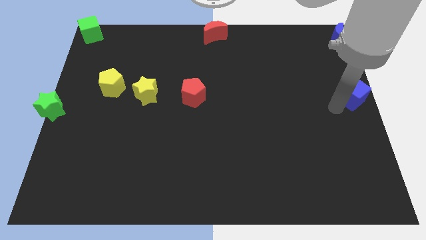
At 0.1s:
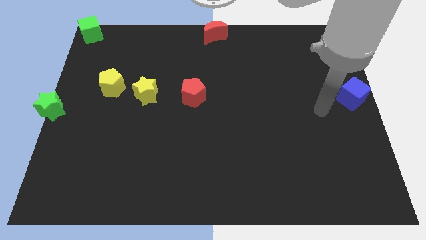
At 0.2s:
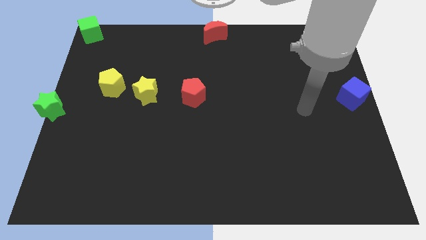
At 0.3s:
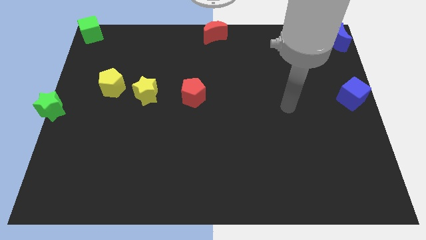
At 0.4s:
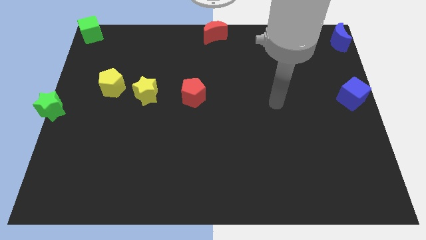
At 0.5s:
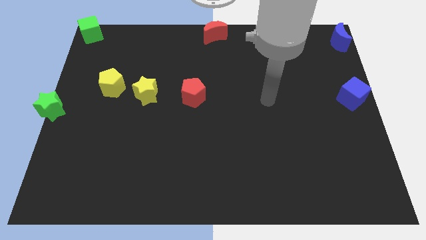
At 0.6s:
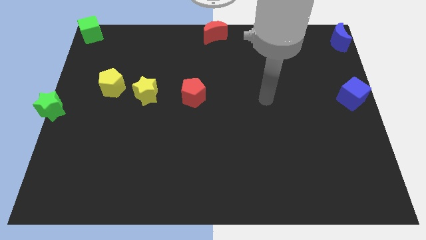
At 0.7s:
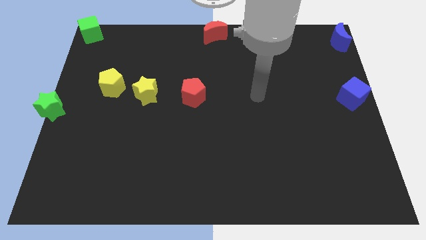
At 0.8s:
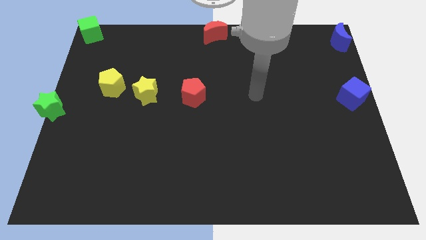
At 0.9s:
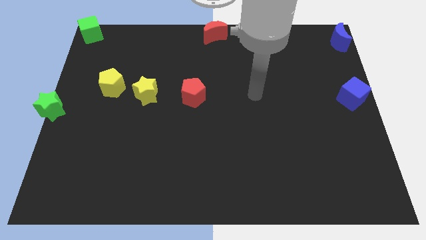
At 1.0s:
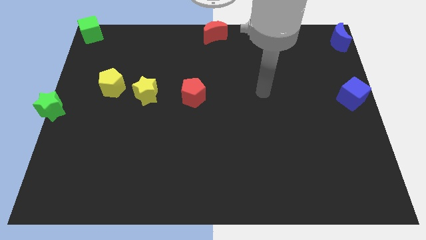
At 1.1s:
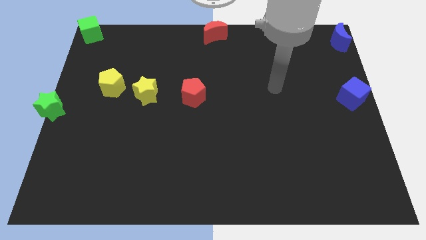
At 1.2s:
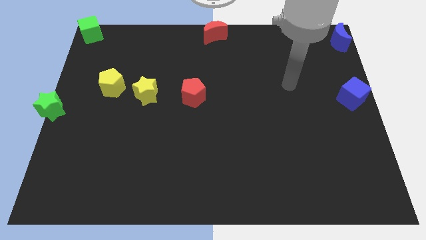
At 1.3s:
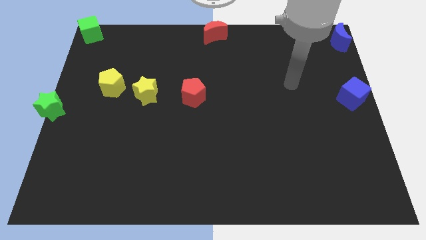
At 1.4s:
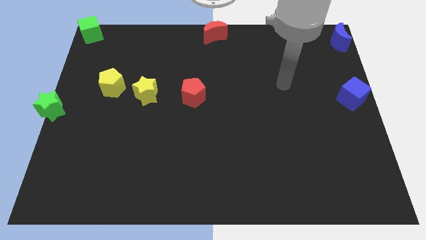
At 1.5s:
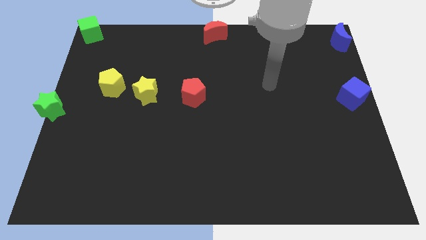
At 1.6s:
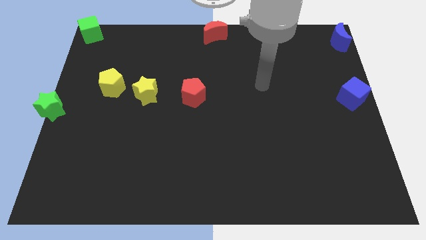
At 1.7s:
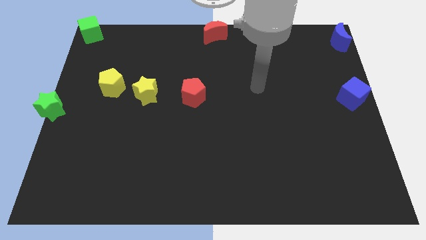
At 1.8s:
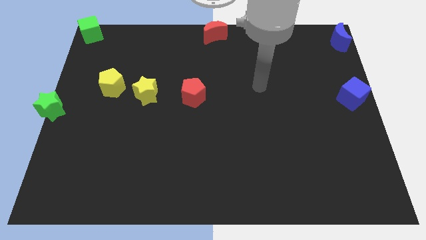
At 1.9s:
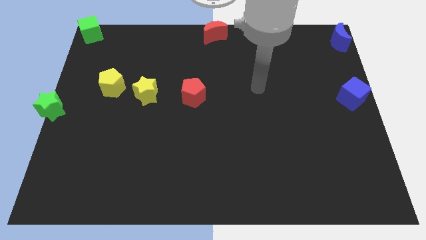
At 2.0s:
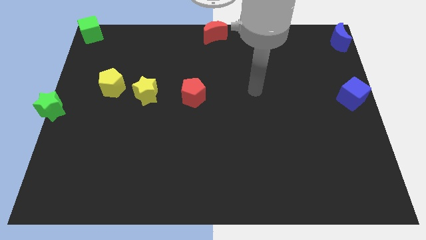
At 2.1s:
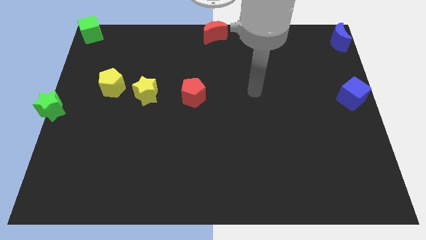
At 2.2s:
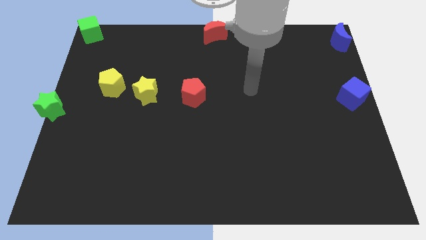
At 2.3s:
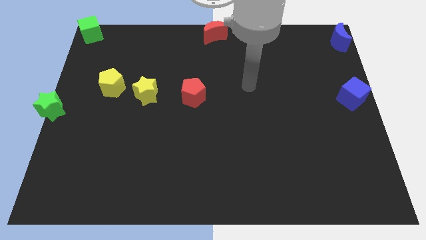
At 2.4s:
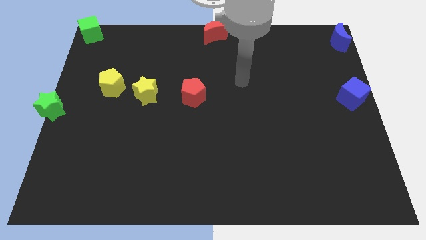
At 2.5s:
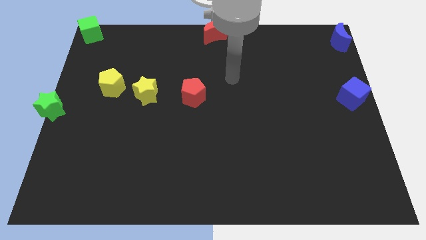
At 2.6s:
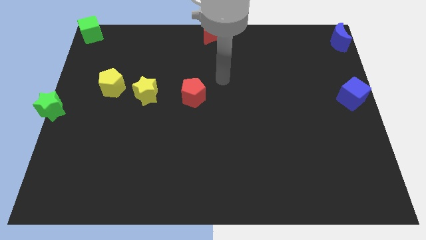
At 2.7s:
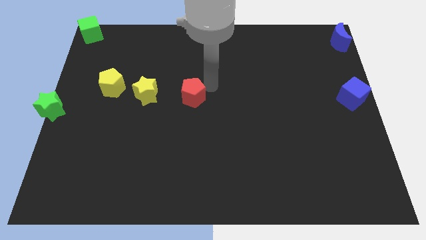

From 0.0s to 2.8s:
move the arm away from the blue cube

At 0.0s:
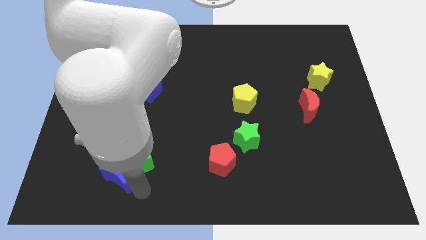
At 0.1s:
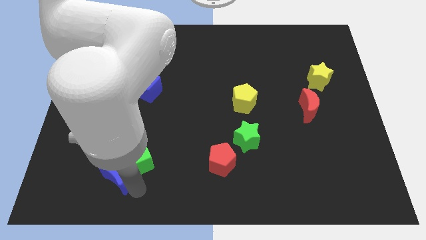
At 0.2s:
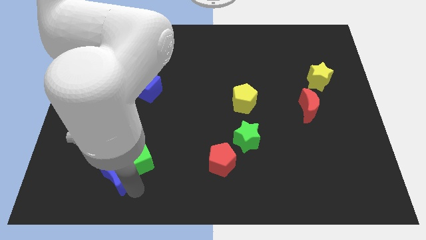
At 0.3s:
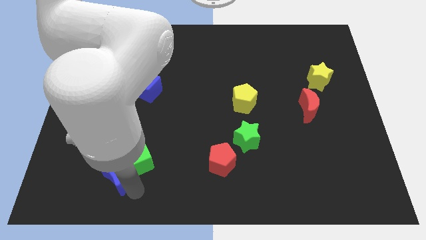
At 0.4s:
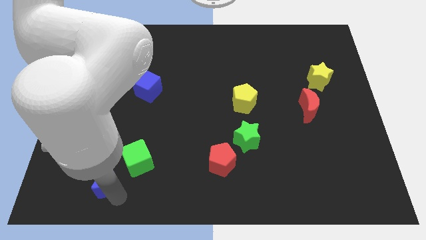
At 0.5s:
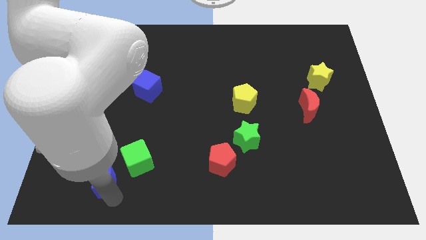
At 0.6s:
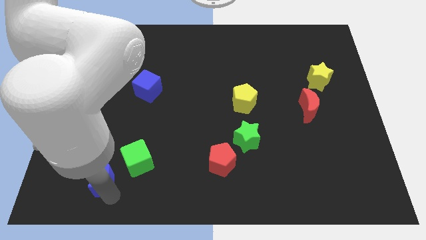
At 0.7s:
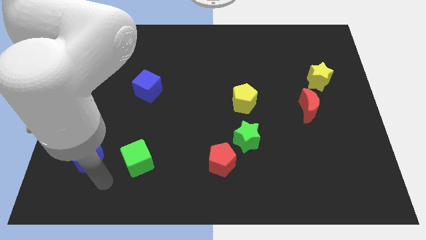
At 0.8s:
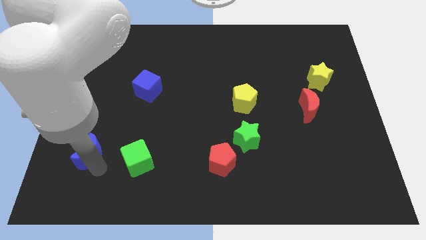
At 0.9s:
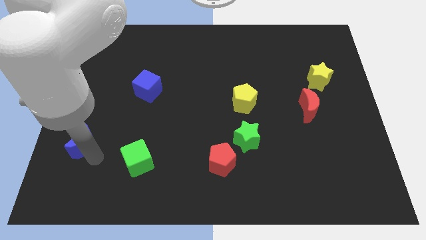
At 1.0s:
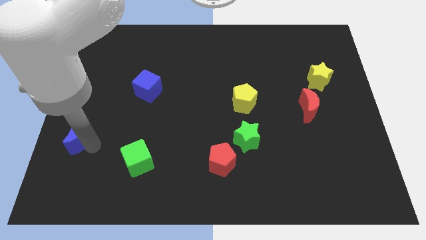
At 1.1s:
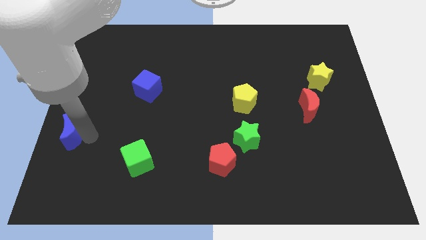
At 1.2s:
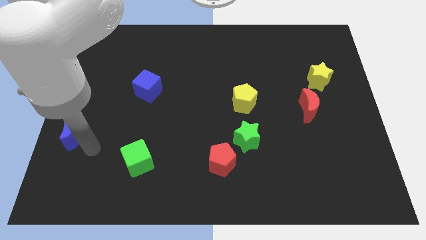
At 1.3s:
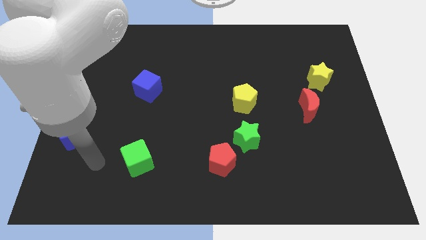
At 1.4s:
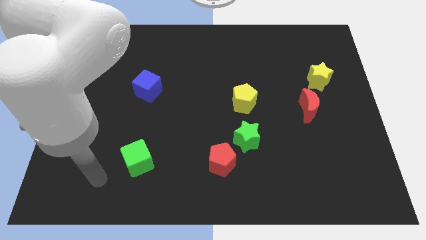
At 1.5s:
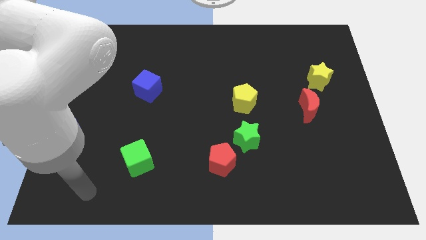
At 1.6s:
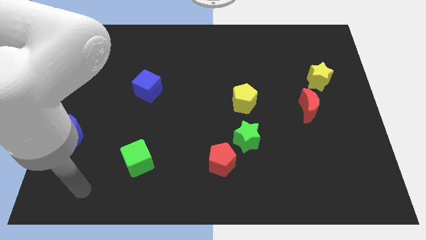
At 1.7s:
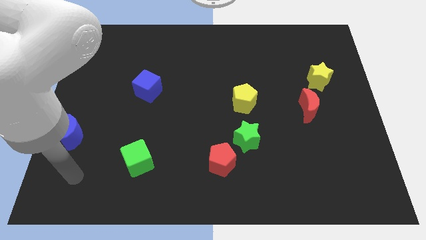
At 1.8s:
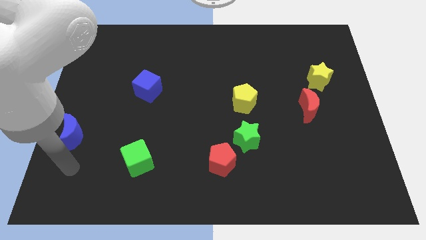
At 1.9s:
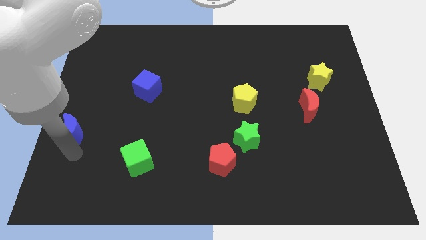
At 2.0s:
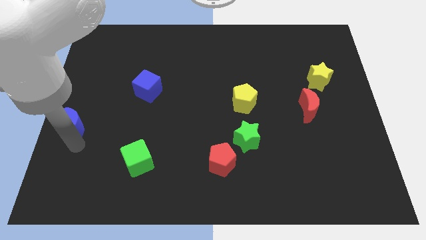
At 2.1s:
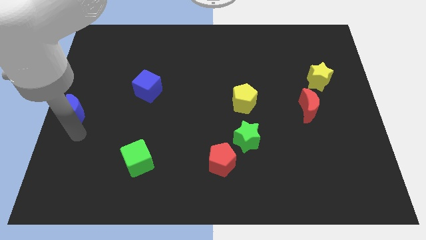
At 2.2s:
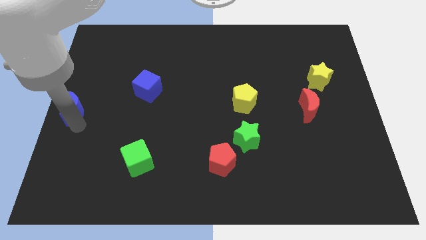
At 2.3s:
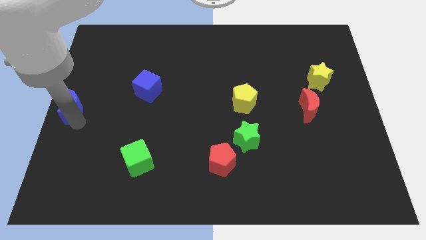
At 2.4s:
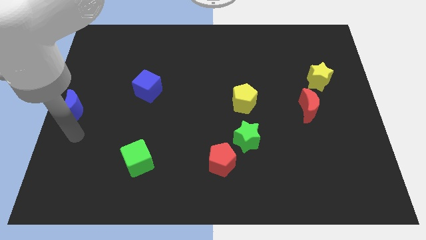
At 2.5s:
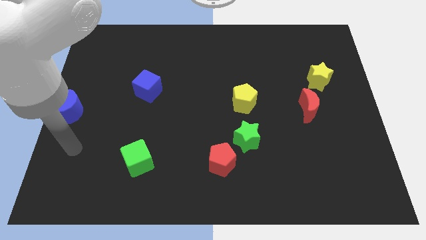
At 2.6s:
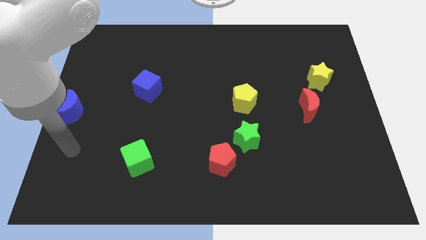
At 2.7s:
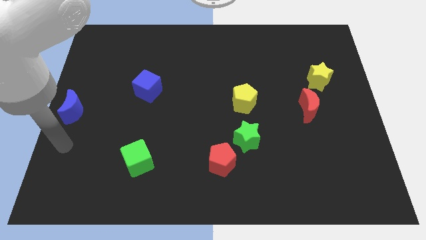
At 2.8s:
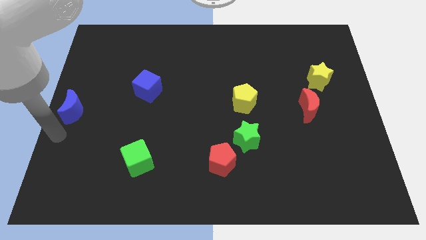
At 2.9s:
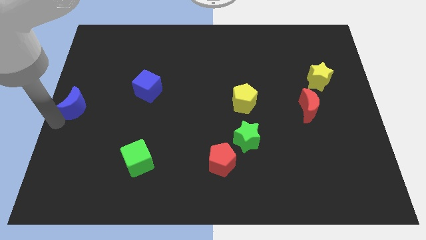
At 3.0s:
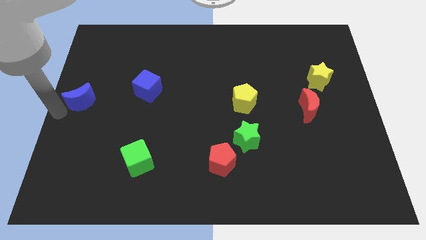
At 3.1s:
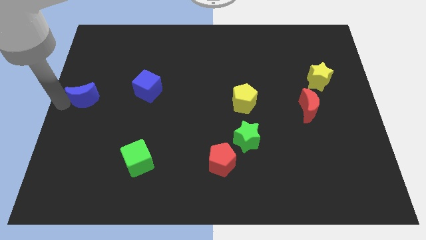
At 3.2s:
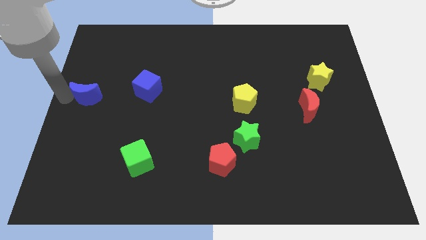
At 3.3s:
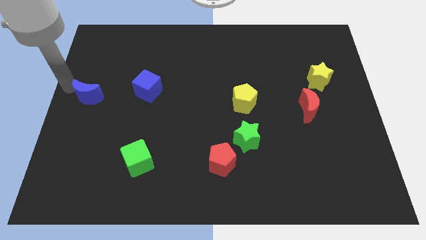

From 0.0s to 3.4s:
move the blue moon to the center left

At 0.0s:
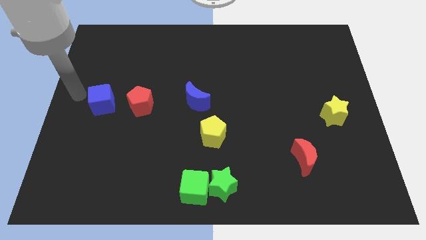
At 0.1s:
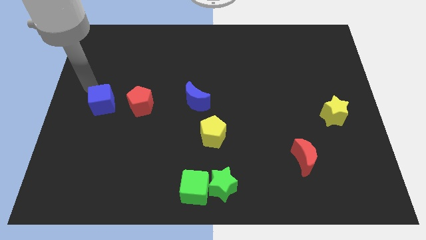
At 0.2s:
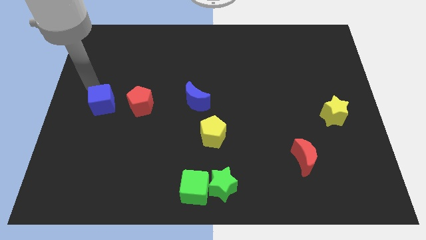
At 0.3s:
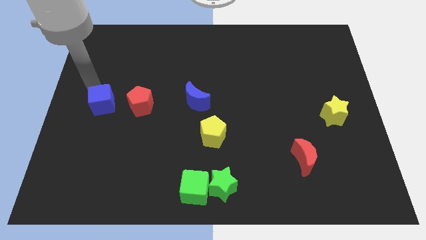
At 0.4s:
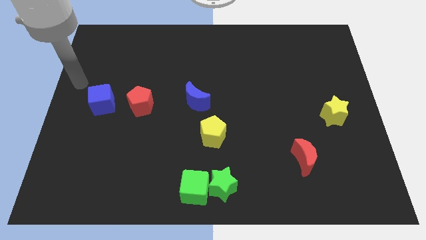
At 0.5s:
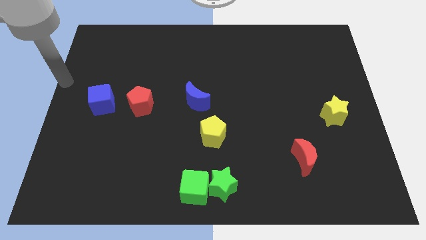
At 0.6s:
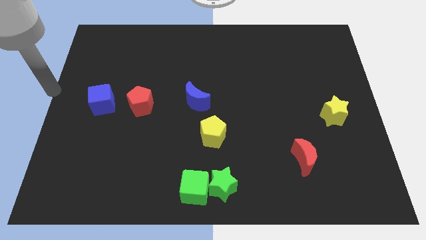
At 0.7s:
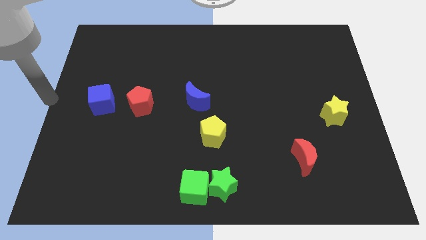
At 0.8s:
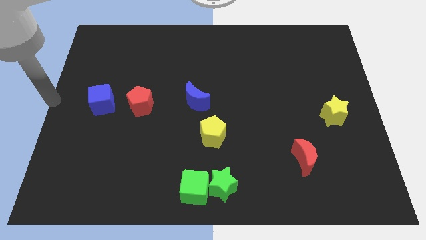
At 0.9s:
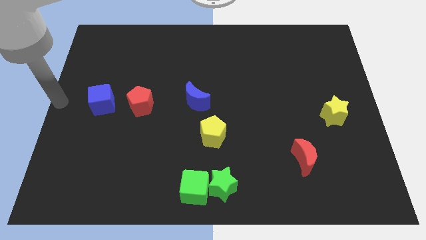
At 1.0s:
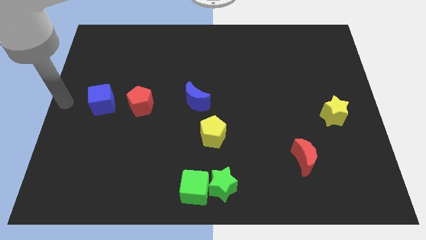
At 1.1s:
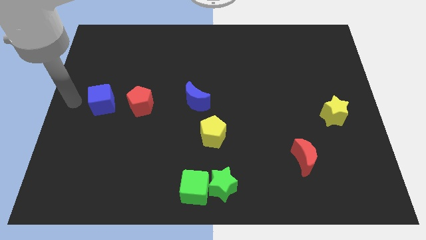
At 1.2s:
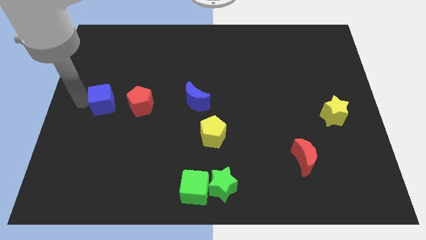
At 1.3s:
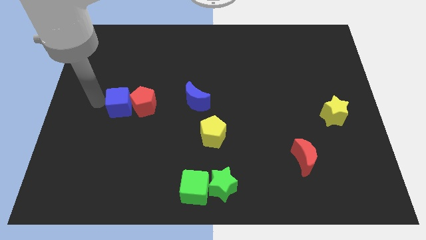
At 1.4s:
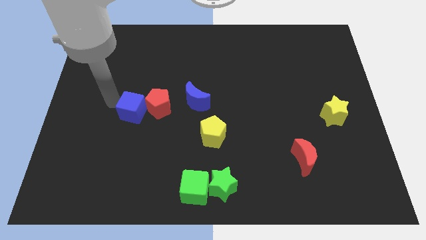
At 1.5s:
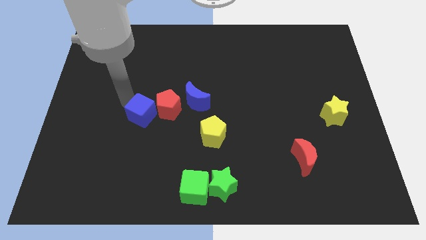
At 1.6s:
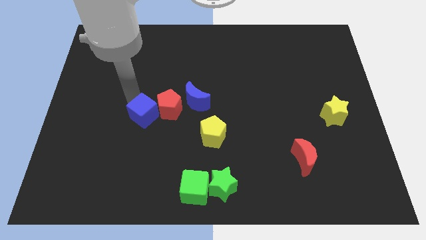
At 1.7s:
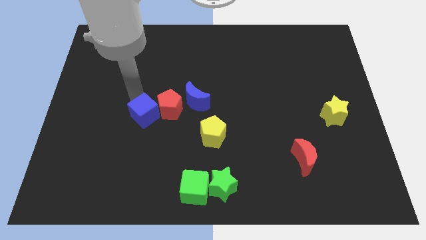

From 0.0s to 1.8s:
push the blue cube into the red pentagon

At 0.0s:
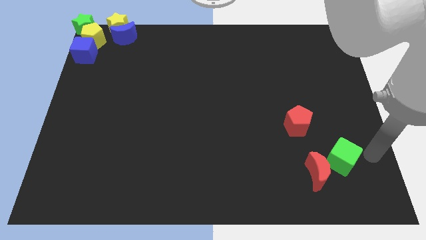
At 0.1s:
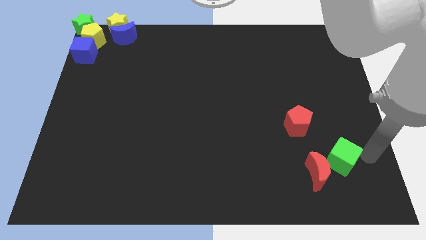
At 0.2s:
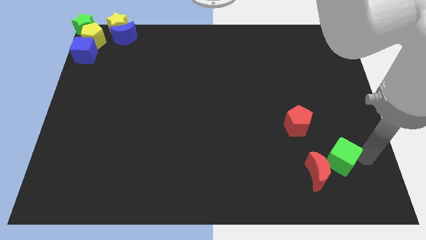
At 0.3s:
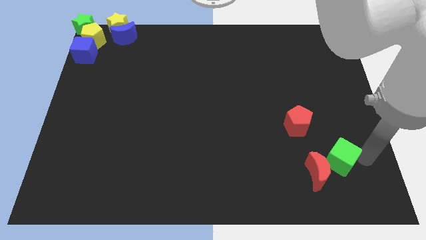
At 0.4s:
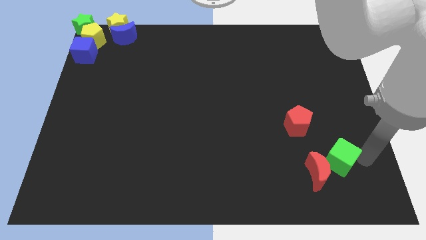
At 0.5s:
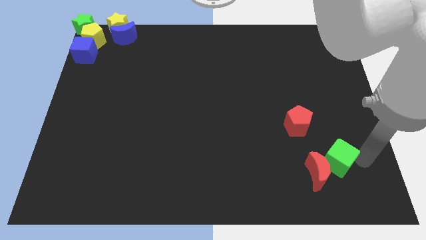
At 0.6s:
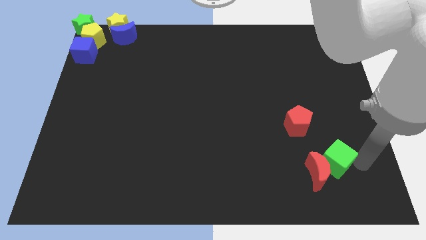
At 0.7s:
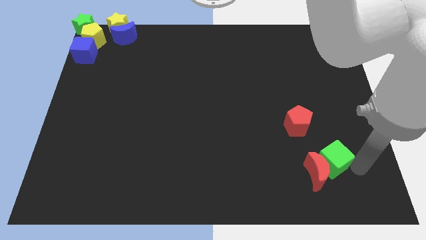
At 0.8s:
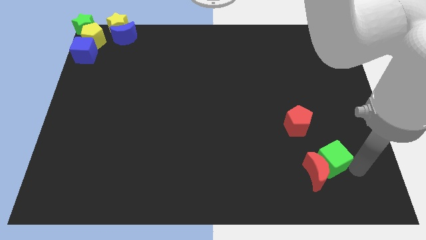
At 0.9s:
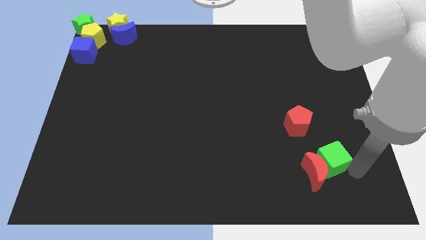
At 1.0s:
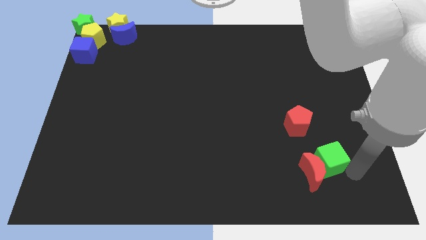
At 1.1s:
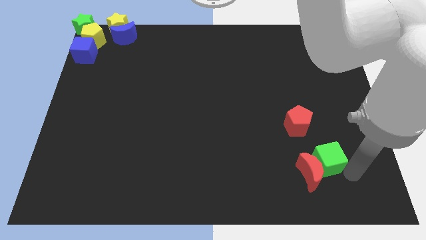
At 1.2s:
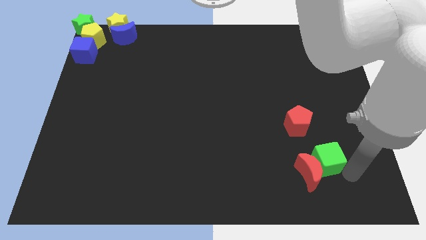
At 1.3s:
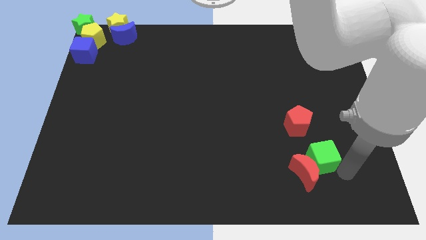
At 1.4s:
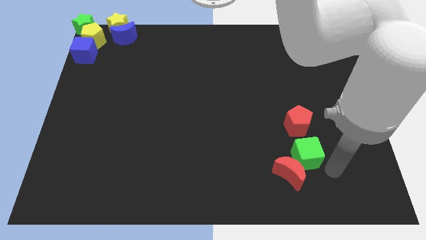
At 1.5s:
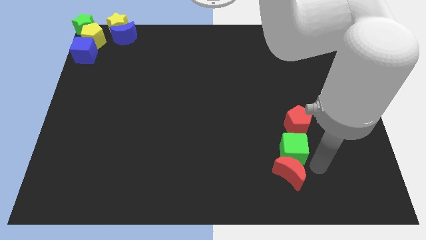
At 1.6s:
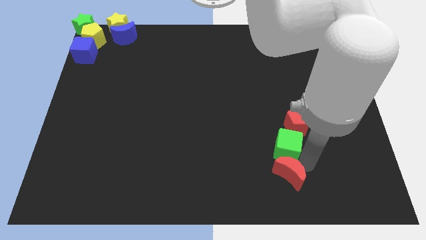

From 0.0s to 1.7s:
move the green cube diagonally in between the red blocks
